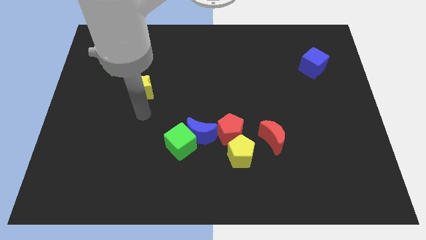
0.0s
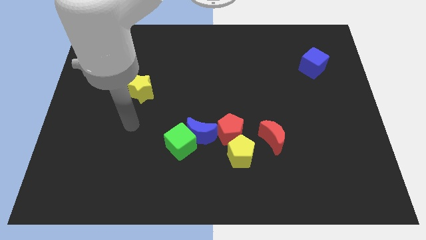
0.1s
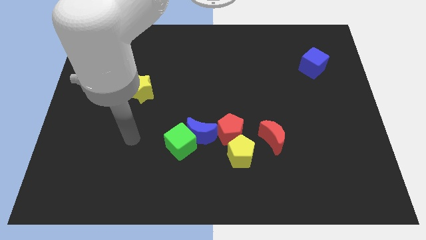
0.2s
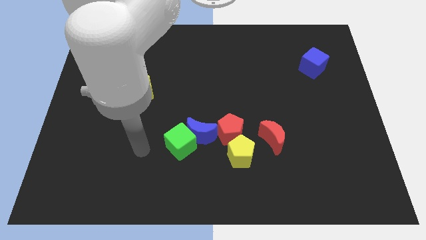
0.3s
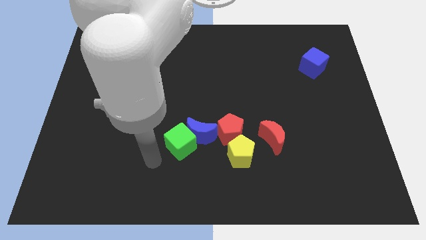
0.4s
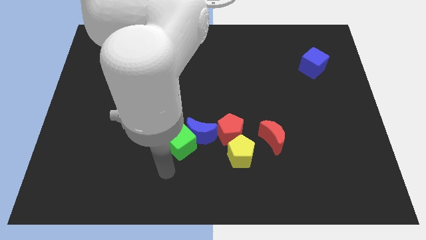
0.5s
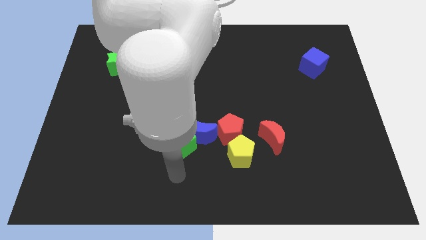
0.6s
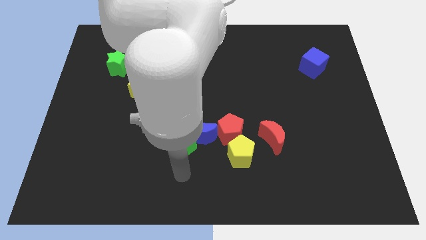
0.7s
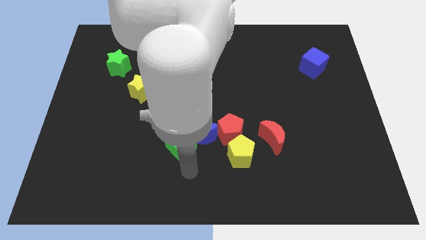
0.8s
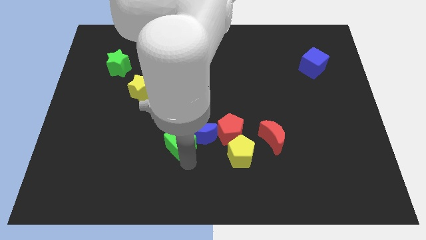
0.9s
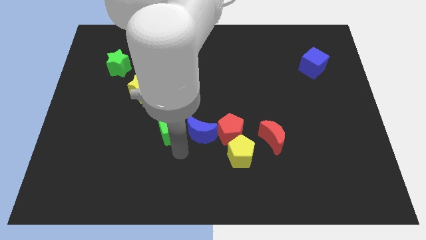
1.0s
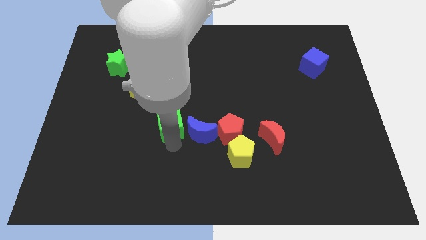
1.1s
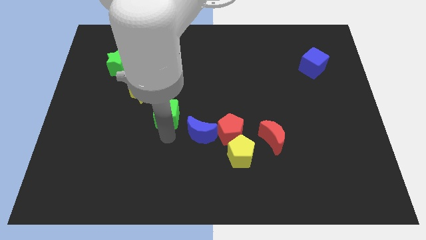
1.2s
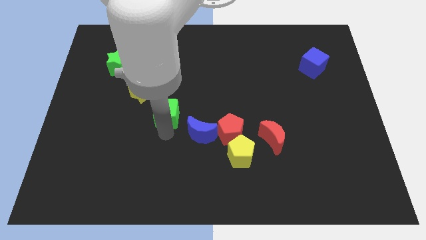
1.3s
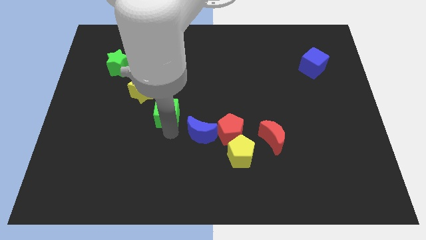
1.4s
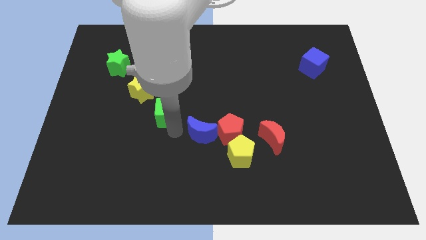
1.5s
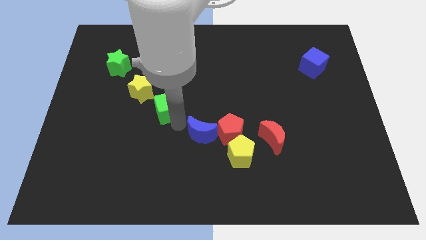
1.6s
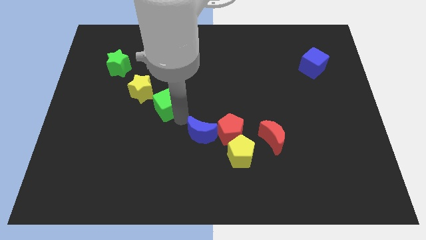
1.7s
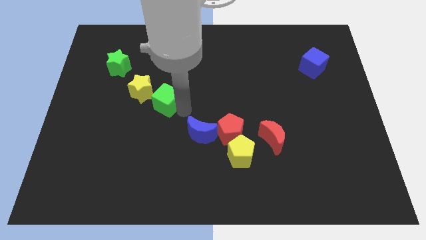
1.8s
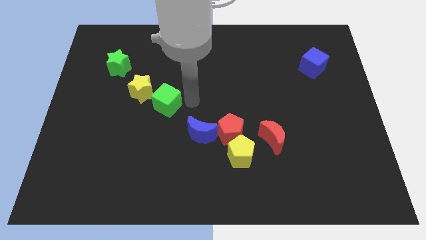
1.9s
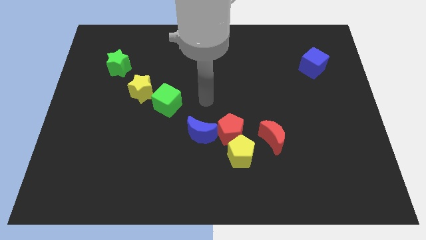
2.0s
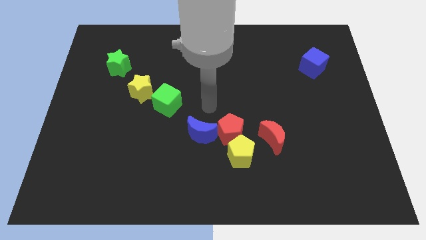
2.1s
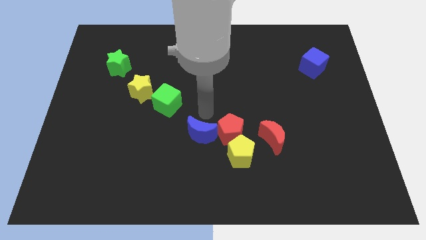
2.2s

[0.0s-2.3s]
place the green cube to the bottom right of the yellow star

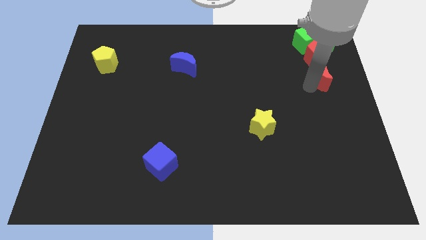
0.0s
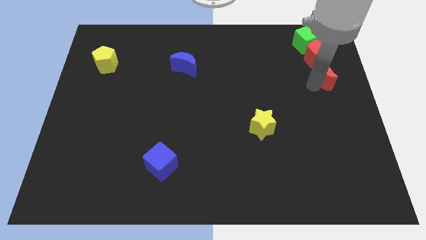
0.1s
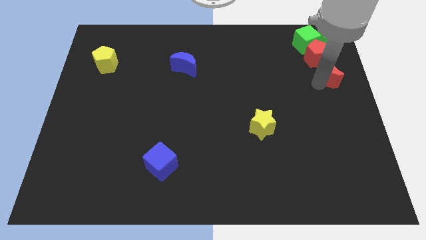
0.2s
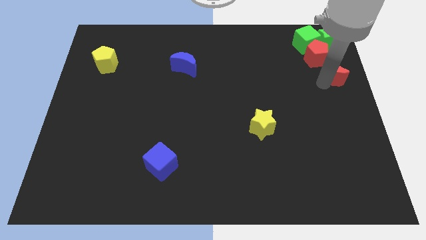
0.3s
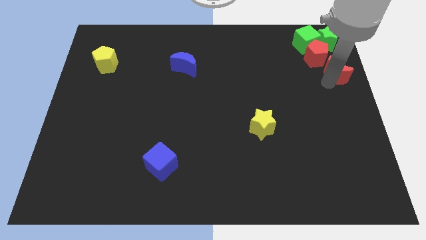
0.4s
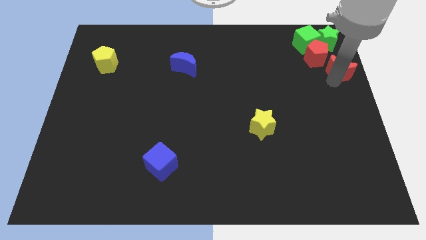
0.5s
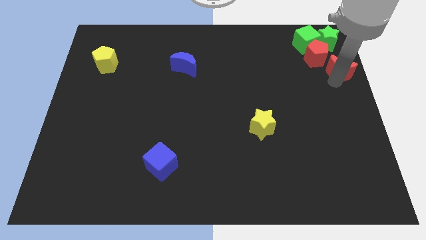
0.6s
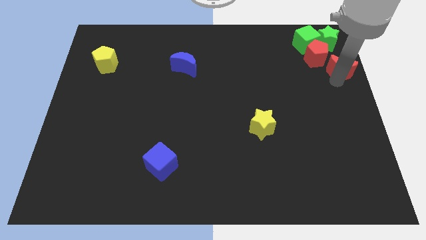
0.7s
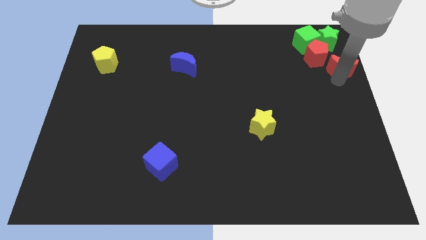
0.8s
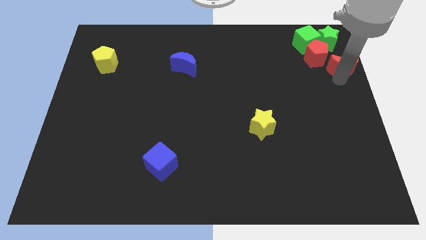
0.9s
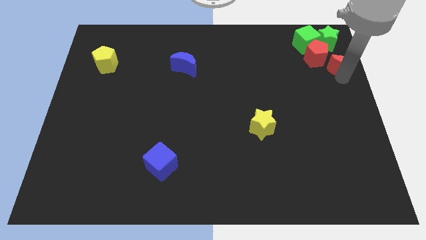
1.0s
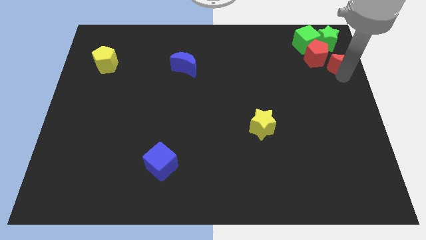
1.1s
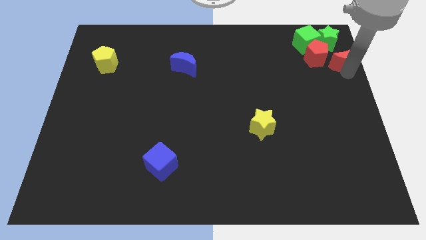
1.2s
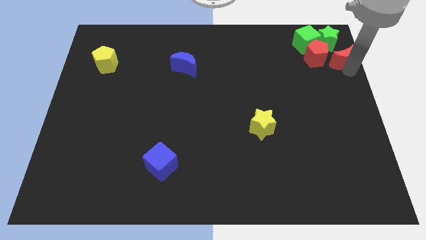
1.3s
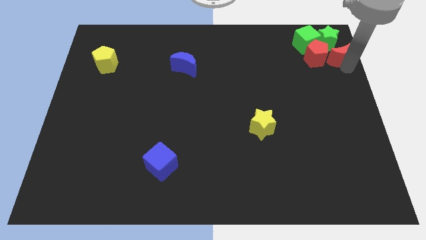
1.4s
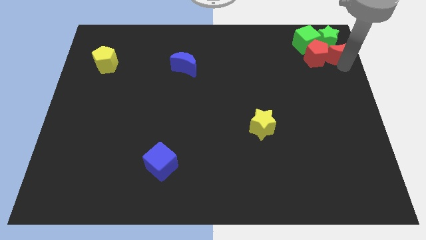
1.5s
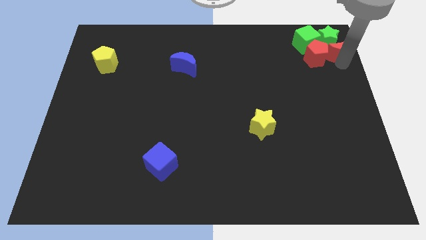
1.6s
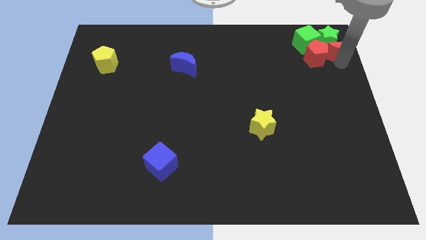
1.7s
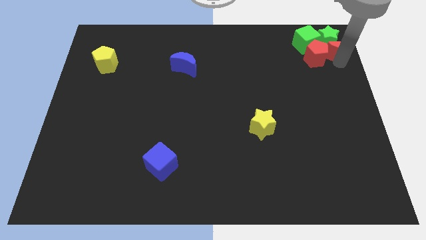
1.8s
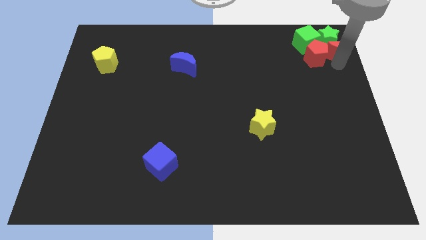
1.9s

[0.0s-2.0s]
move the red crescent right to the red pentagon

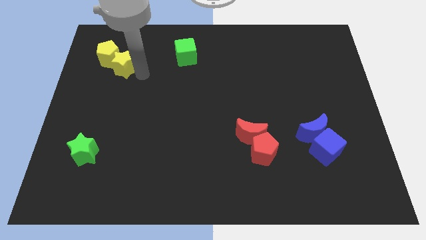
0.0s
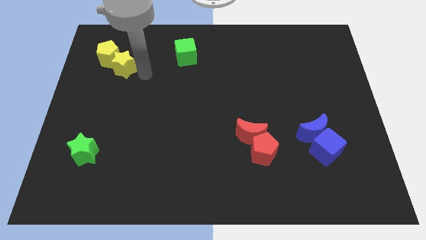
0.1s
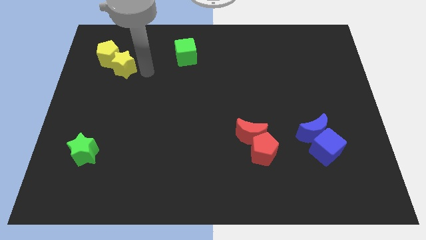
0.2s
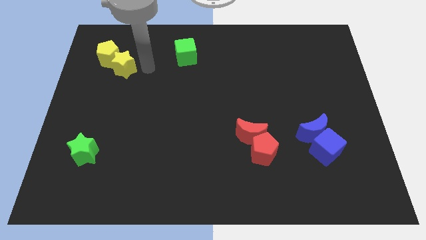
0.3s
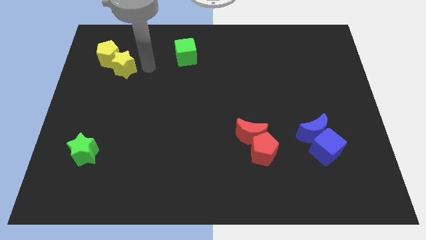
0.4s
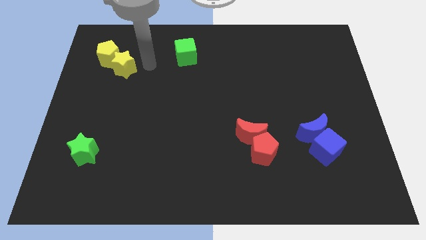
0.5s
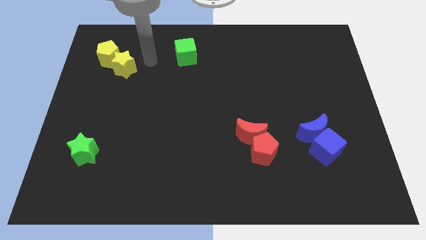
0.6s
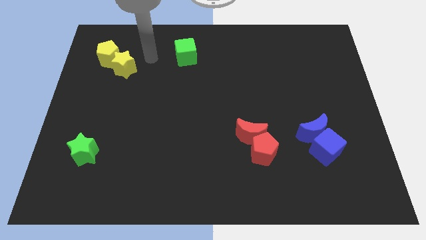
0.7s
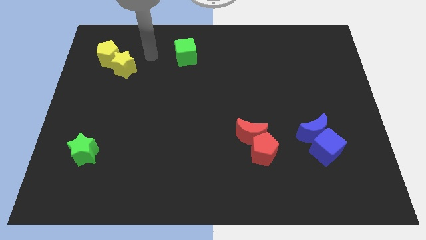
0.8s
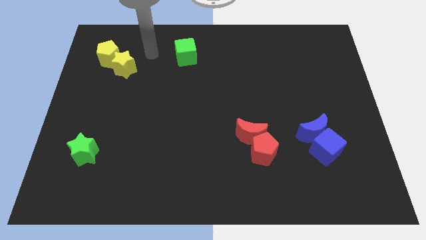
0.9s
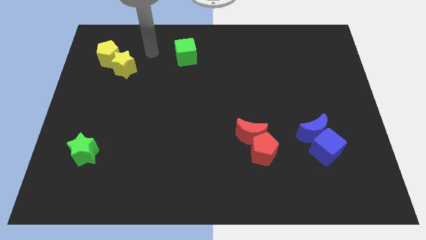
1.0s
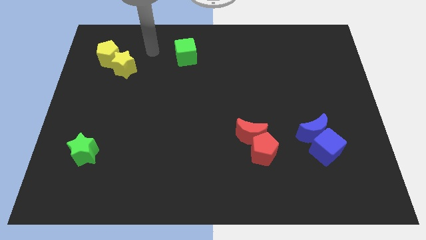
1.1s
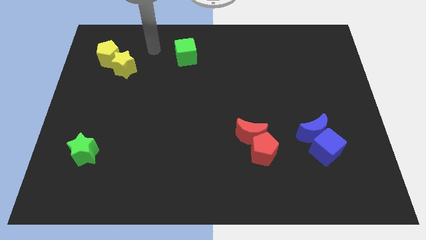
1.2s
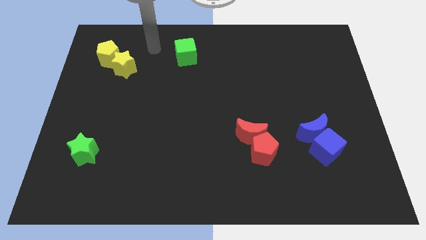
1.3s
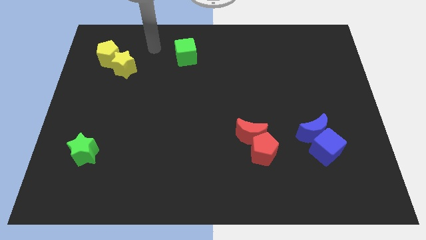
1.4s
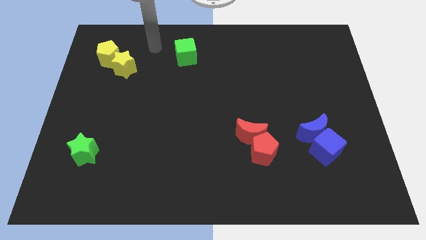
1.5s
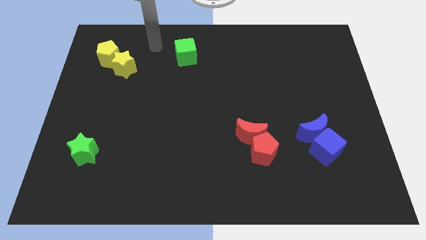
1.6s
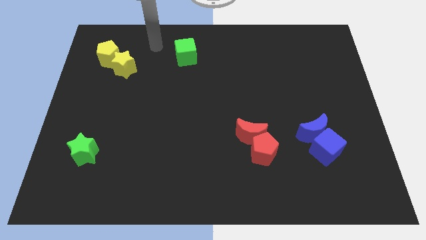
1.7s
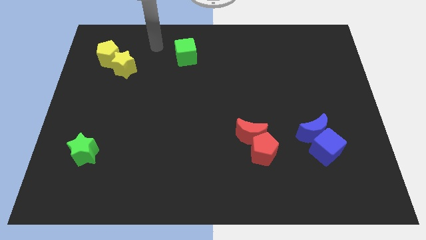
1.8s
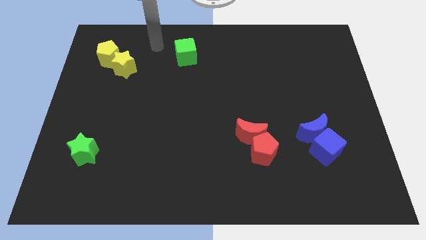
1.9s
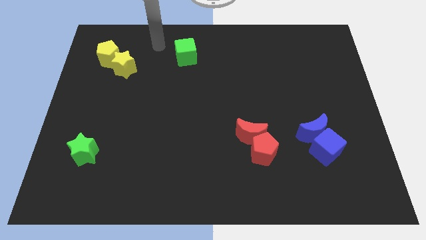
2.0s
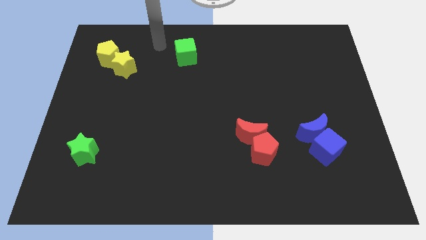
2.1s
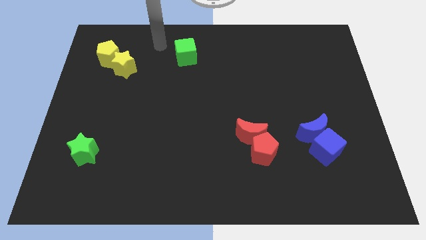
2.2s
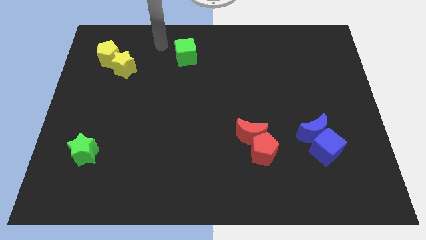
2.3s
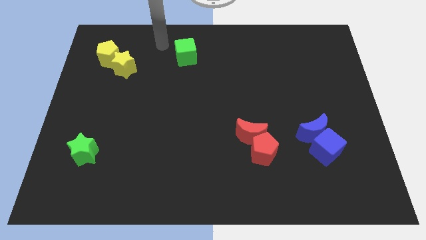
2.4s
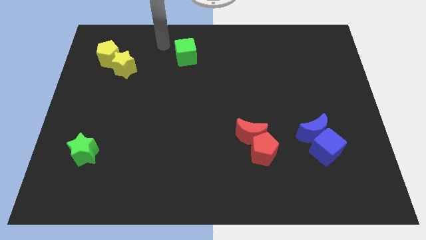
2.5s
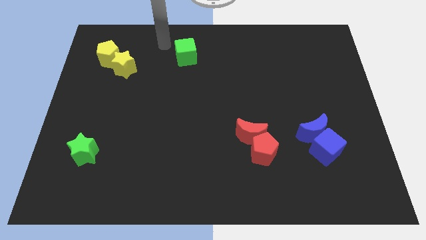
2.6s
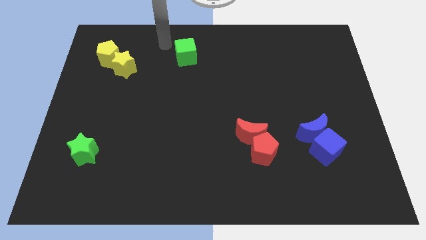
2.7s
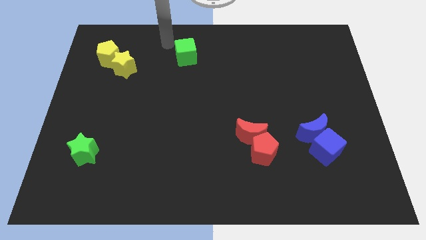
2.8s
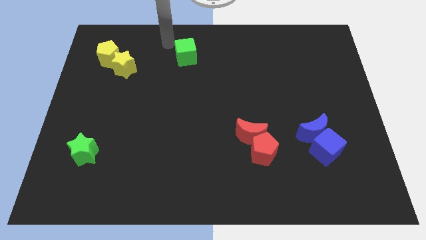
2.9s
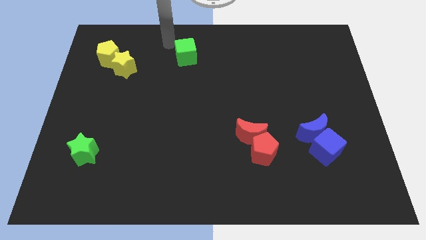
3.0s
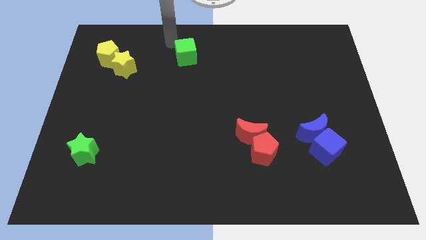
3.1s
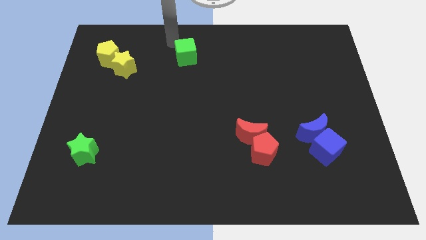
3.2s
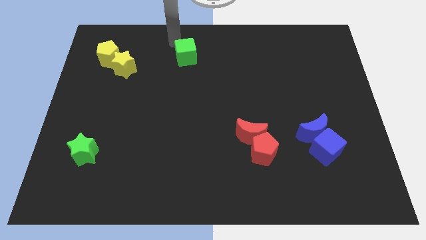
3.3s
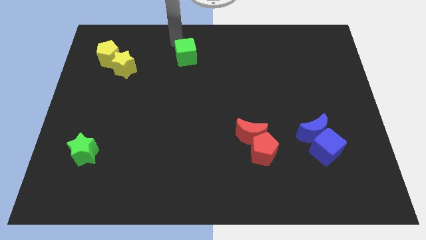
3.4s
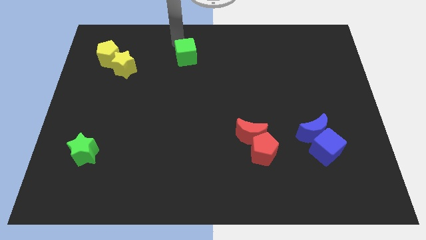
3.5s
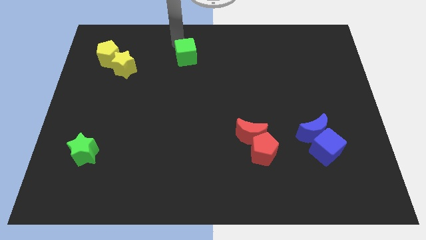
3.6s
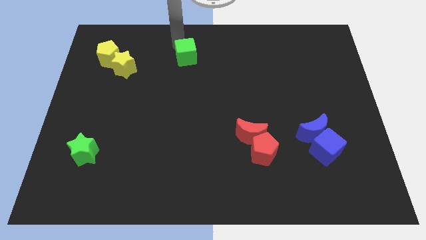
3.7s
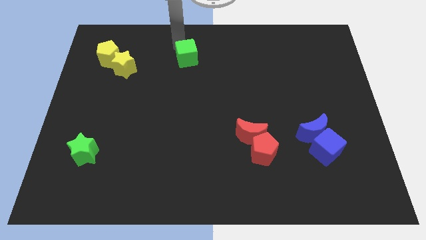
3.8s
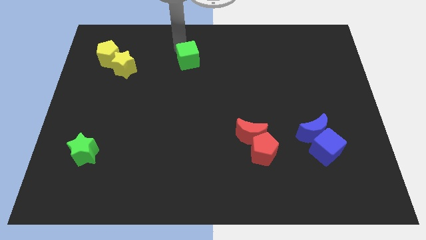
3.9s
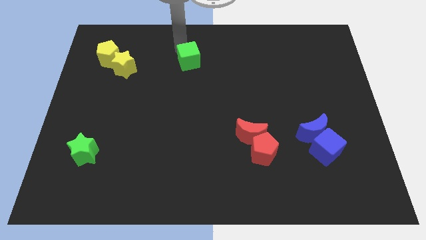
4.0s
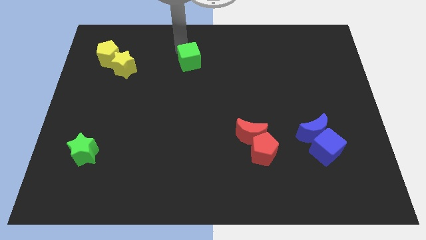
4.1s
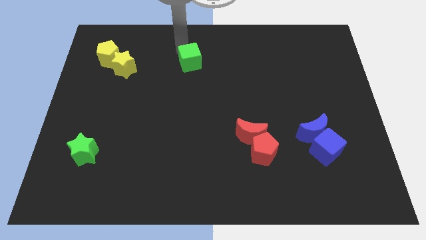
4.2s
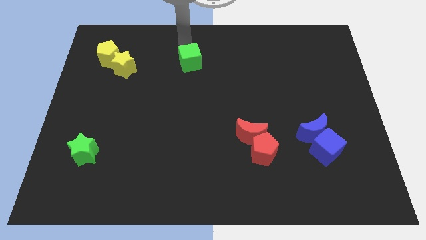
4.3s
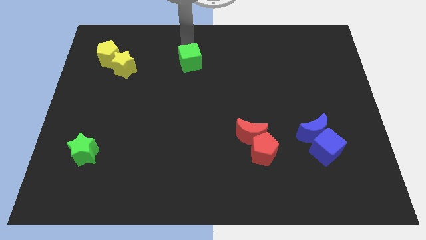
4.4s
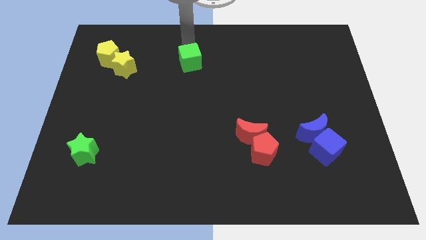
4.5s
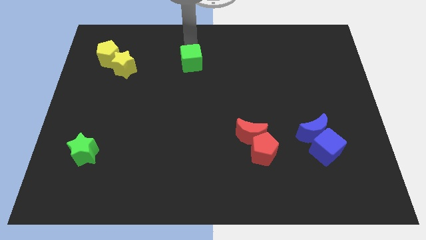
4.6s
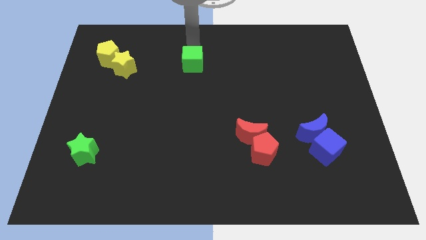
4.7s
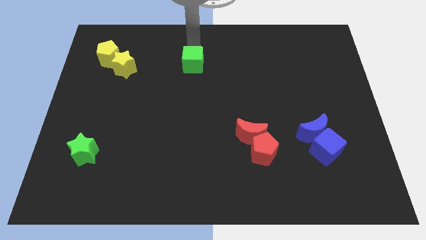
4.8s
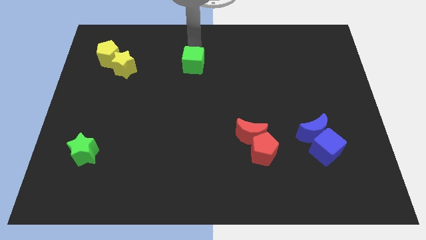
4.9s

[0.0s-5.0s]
slide the green cube parallel right to the yellow star
